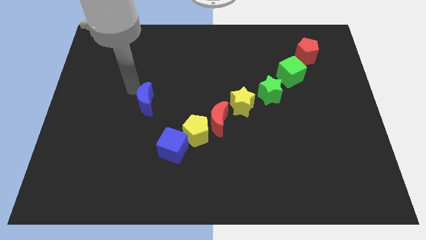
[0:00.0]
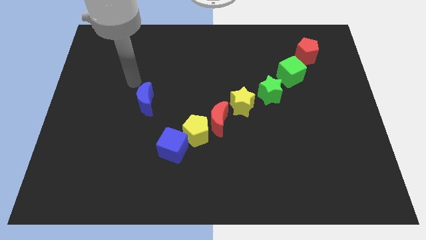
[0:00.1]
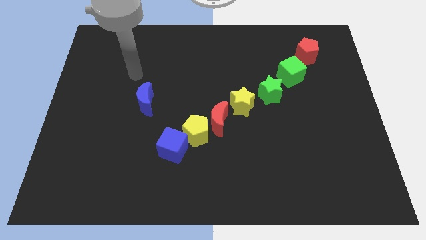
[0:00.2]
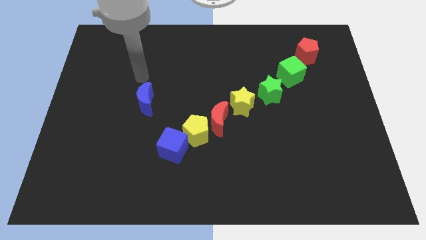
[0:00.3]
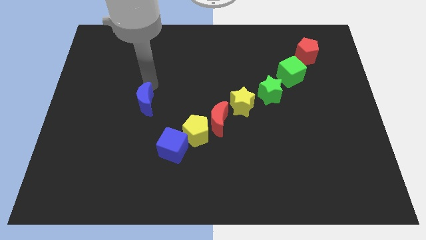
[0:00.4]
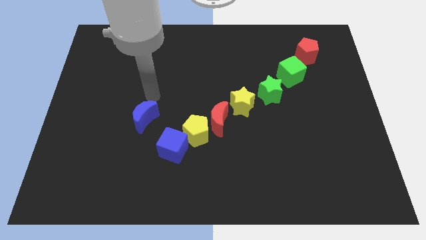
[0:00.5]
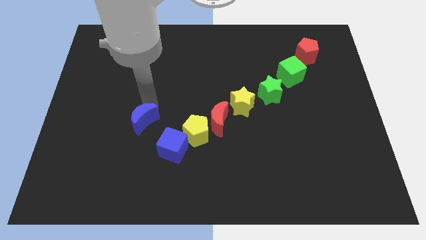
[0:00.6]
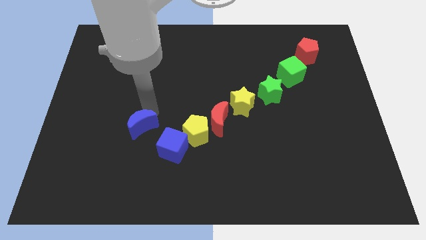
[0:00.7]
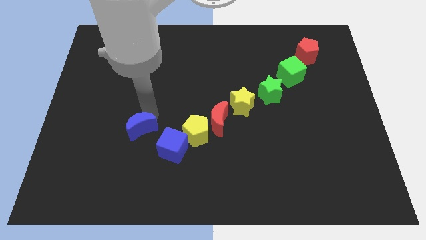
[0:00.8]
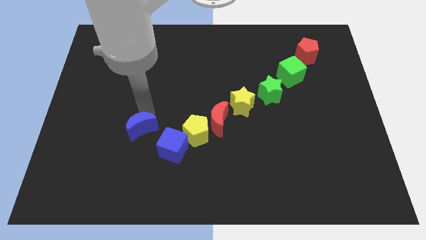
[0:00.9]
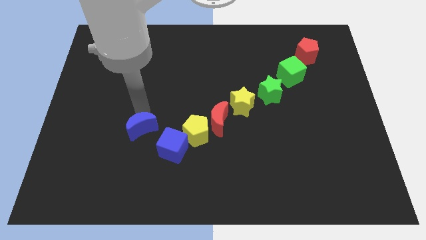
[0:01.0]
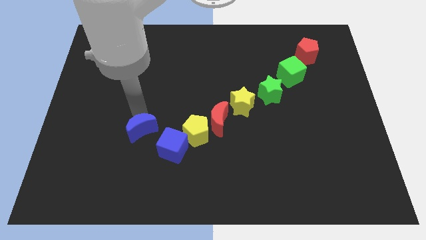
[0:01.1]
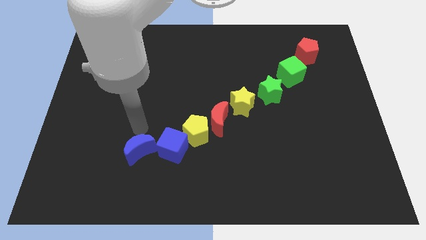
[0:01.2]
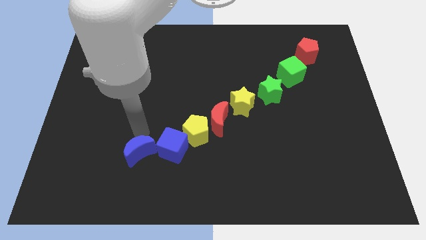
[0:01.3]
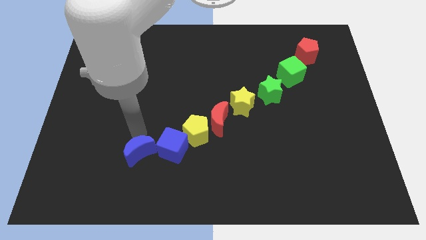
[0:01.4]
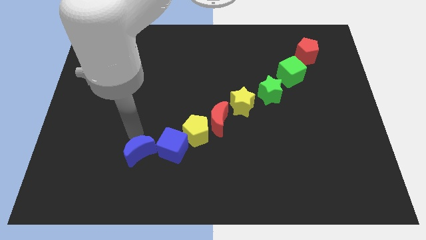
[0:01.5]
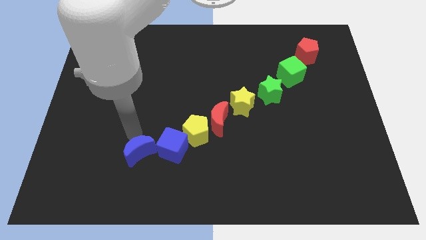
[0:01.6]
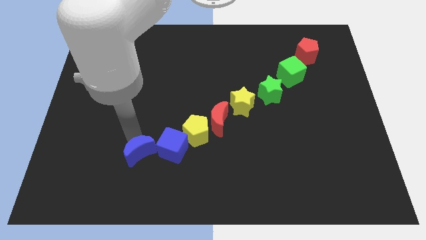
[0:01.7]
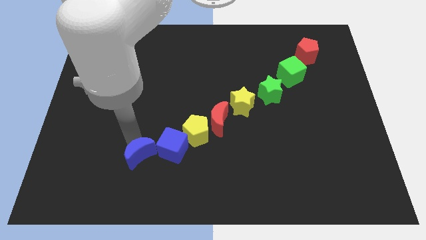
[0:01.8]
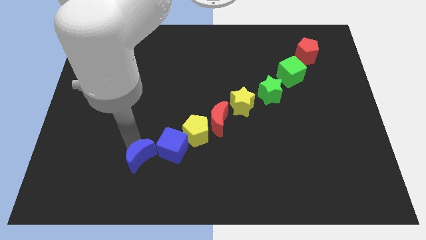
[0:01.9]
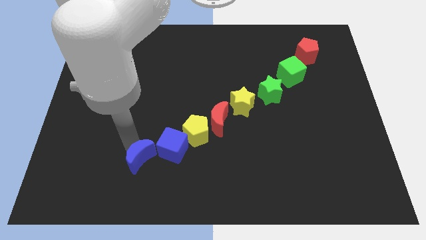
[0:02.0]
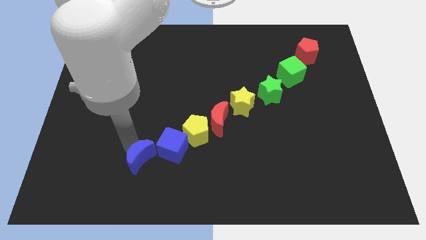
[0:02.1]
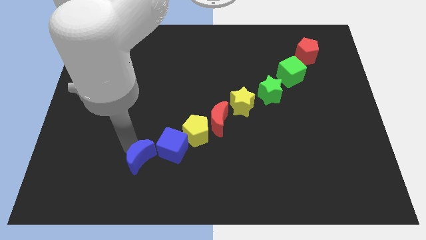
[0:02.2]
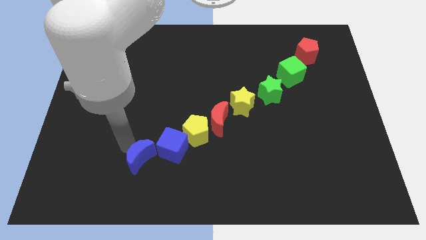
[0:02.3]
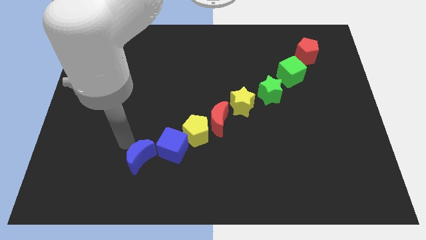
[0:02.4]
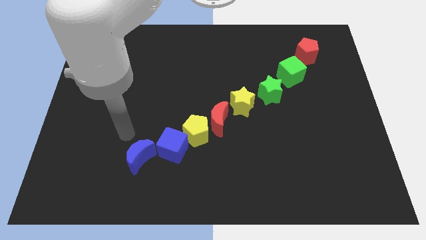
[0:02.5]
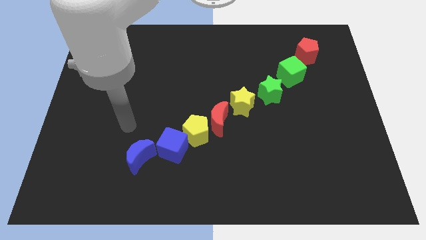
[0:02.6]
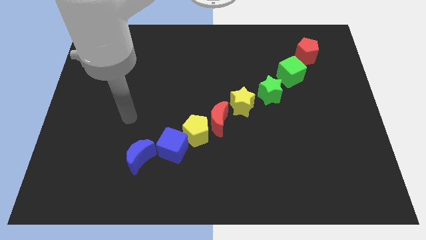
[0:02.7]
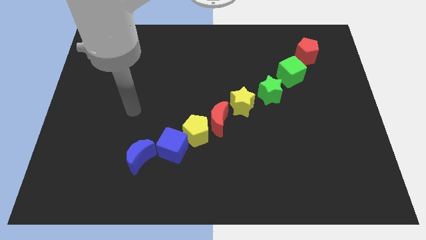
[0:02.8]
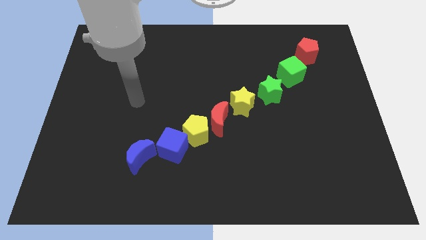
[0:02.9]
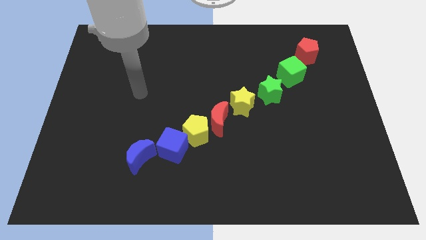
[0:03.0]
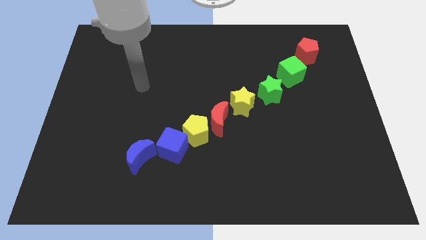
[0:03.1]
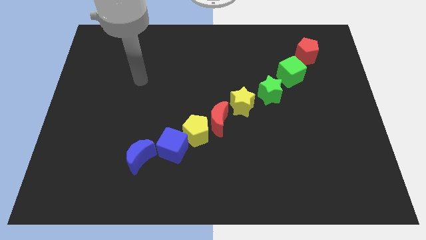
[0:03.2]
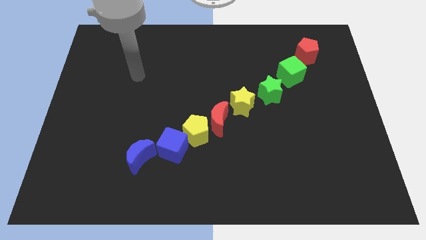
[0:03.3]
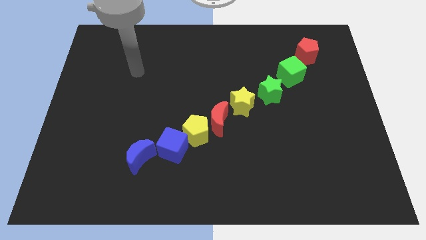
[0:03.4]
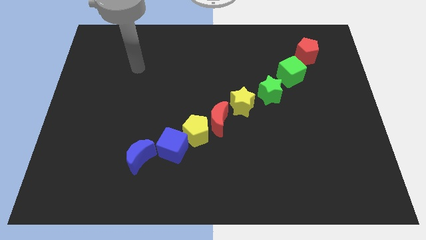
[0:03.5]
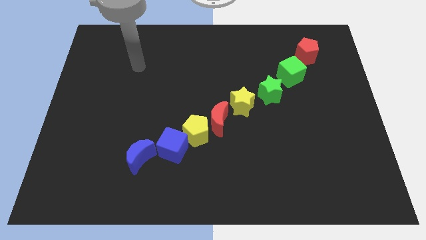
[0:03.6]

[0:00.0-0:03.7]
join blue moon to the blue cube to form a line

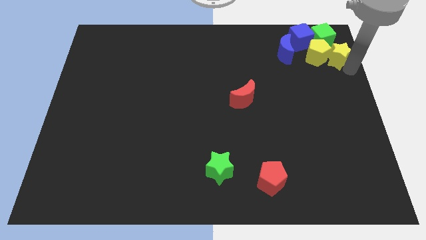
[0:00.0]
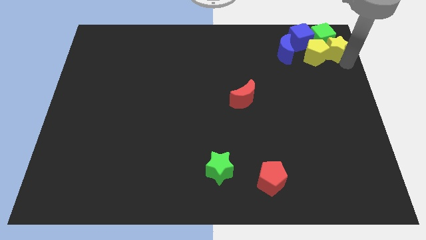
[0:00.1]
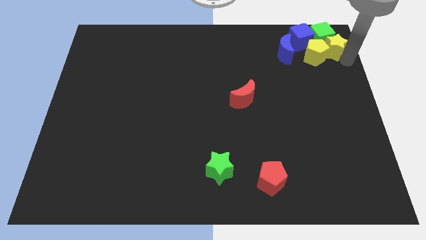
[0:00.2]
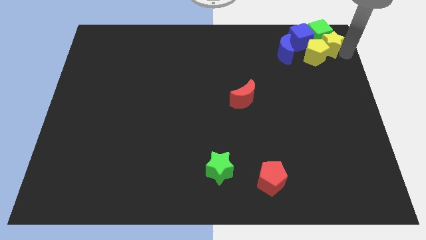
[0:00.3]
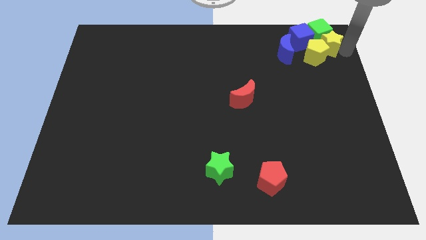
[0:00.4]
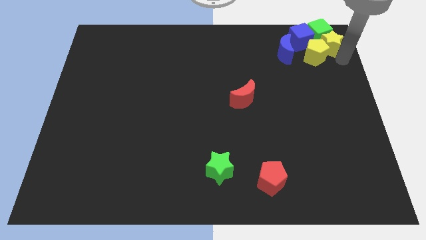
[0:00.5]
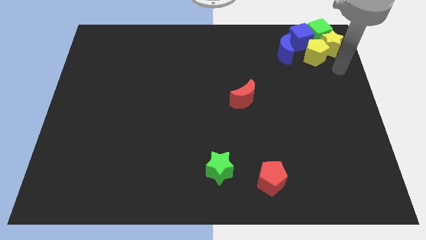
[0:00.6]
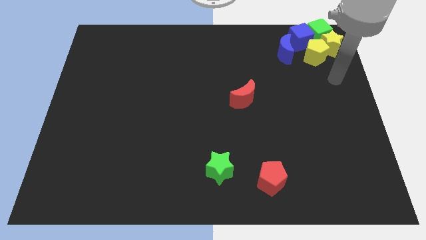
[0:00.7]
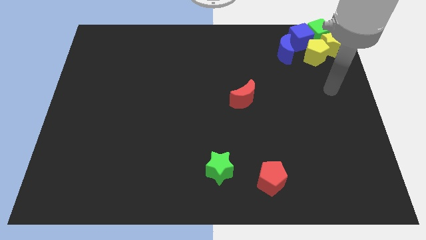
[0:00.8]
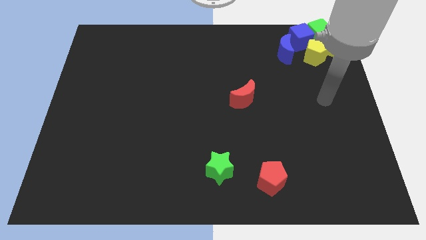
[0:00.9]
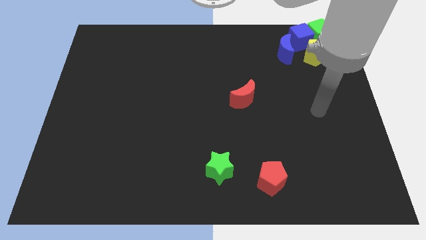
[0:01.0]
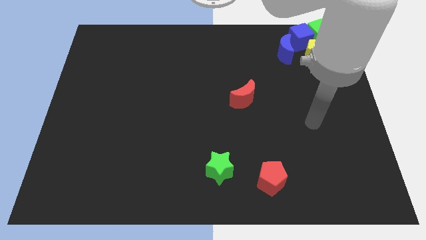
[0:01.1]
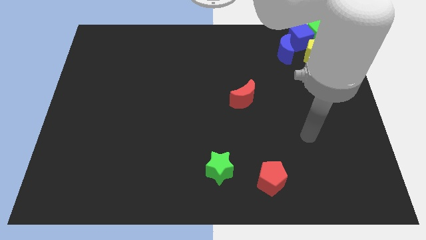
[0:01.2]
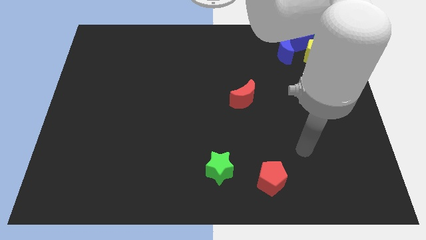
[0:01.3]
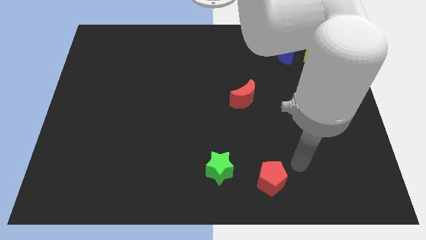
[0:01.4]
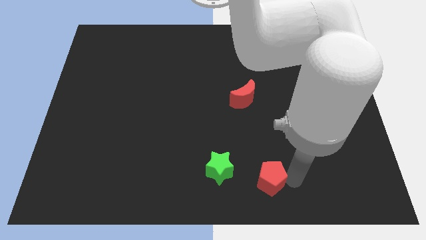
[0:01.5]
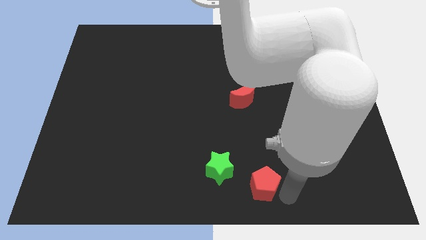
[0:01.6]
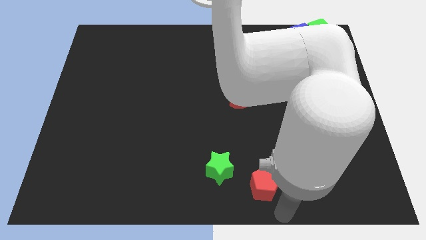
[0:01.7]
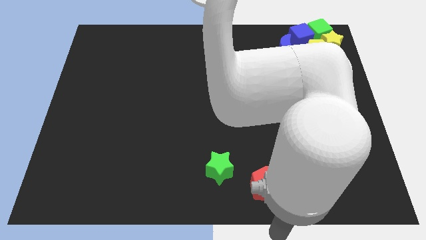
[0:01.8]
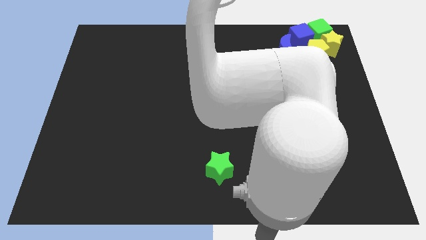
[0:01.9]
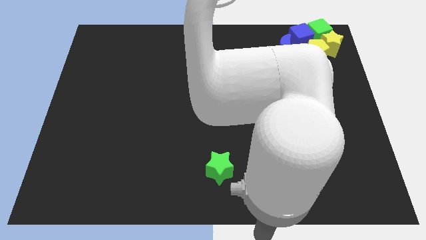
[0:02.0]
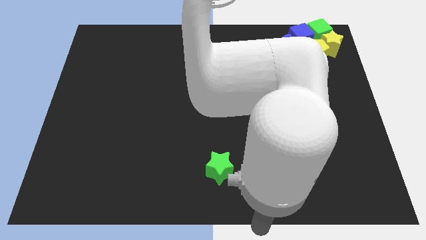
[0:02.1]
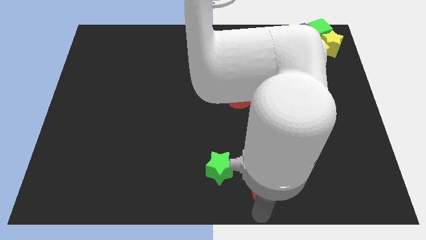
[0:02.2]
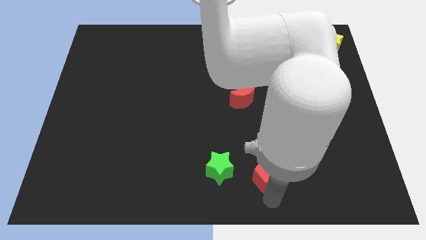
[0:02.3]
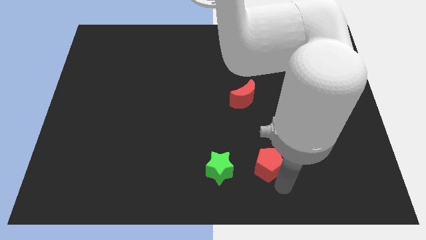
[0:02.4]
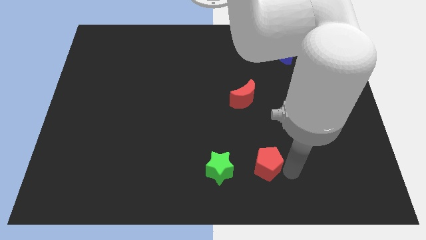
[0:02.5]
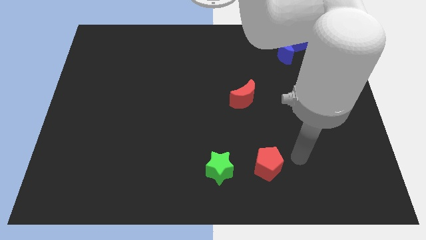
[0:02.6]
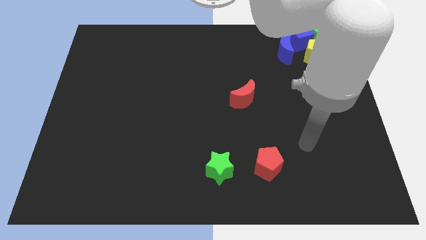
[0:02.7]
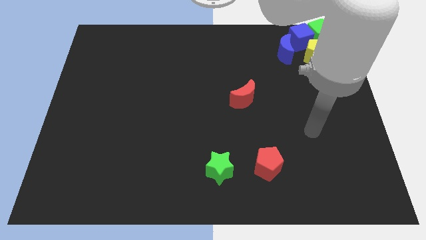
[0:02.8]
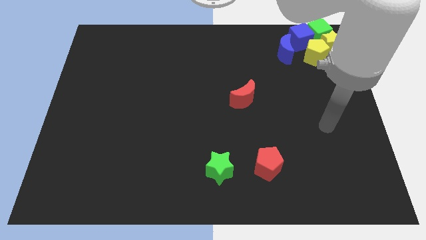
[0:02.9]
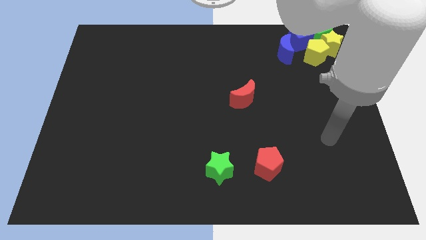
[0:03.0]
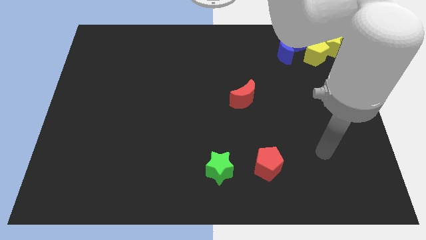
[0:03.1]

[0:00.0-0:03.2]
move the red pentagon to the right of the green star

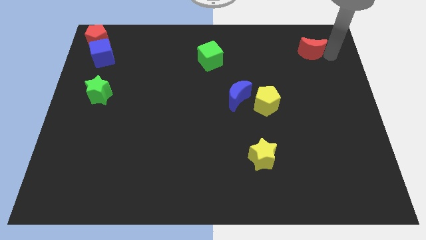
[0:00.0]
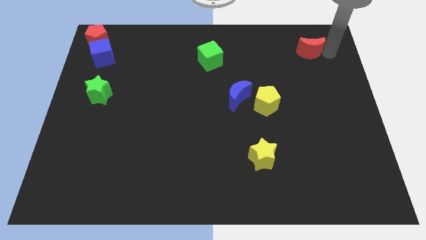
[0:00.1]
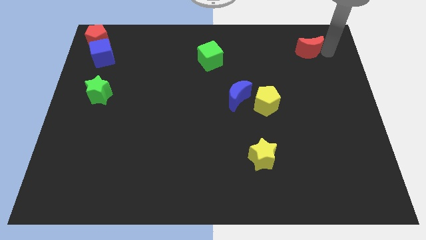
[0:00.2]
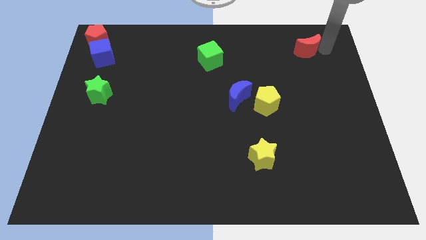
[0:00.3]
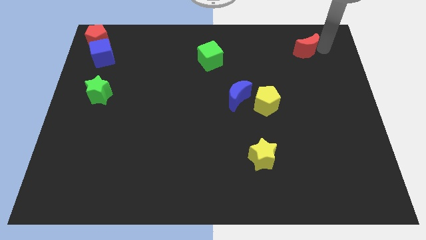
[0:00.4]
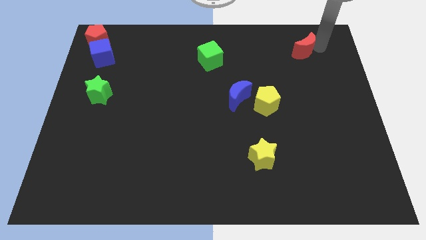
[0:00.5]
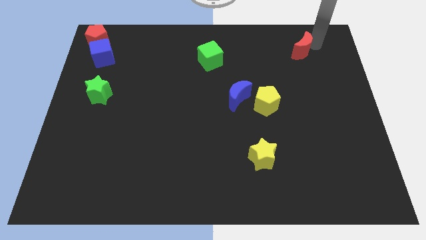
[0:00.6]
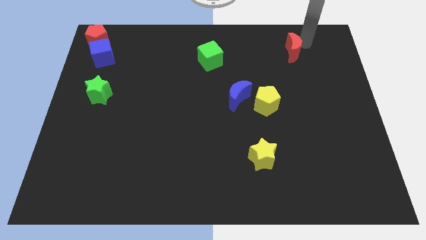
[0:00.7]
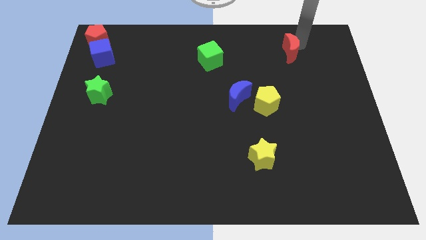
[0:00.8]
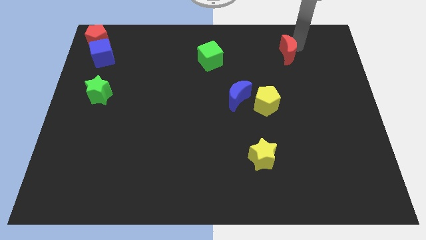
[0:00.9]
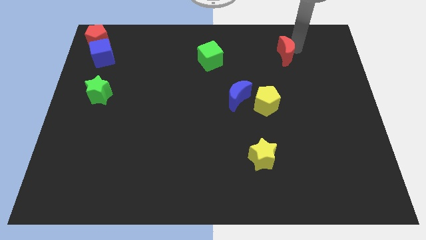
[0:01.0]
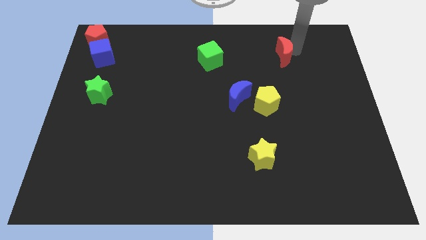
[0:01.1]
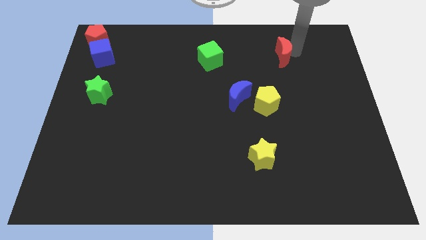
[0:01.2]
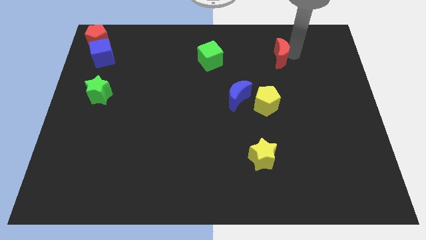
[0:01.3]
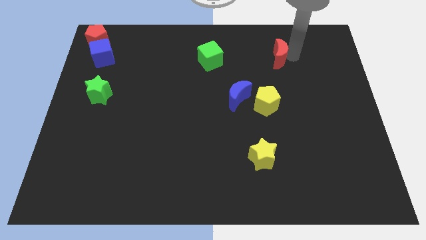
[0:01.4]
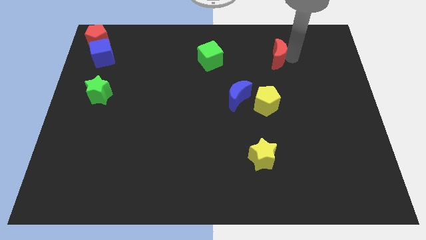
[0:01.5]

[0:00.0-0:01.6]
move the red crescent towards the green cube

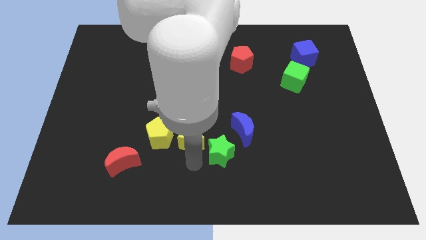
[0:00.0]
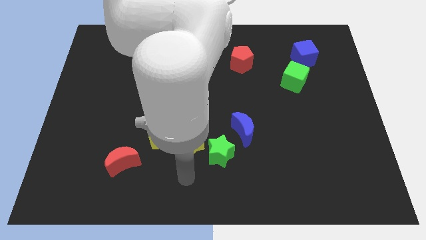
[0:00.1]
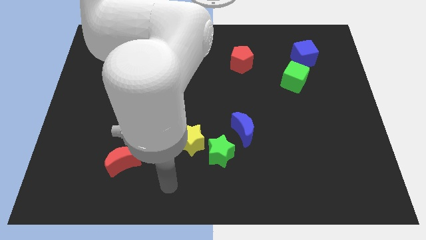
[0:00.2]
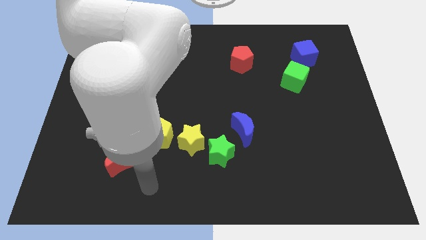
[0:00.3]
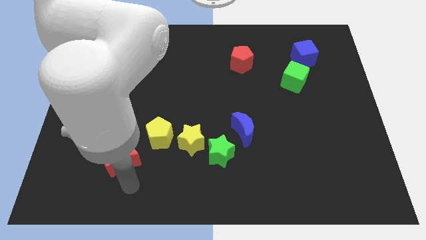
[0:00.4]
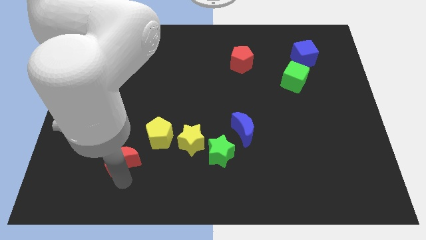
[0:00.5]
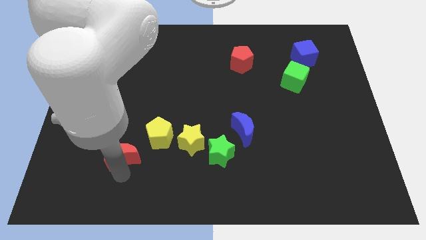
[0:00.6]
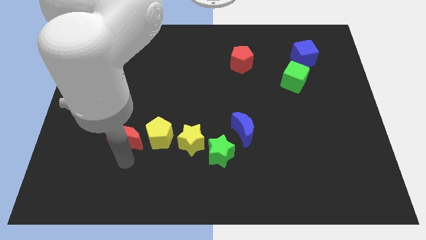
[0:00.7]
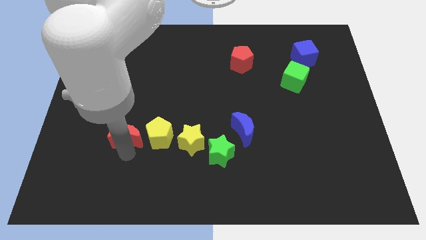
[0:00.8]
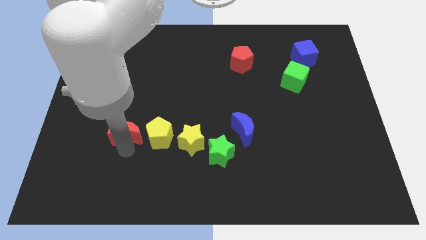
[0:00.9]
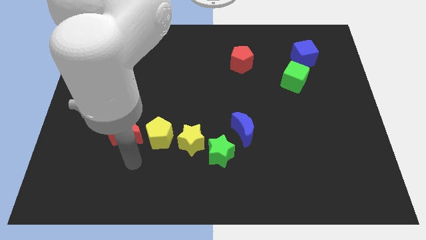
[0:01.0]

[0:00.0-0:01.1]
push the red crescent to the left of the yellow pentagon
